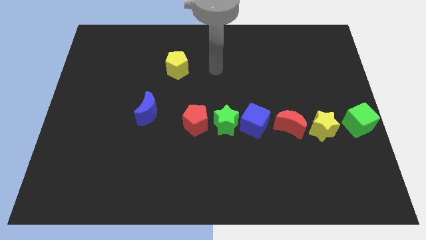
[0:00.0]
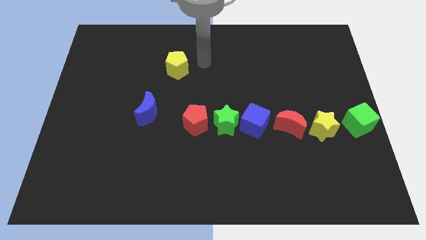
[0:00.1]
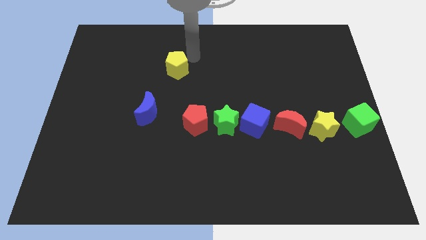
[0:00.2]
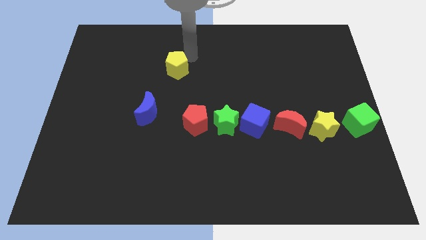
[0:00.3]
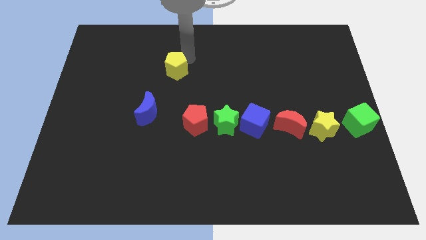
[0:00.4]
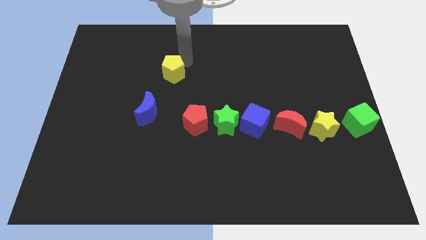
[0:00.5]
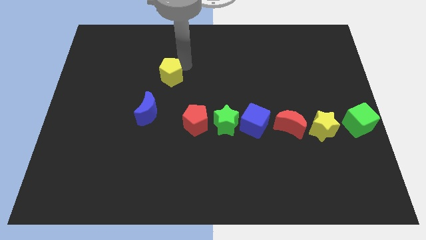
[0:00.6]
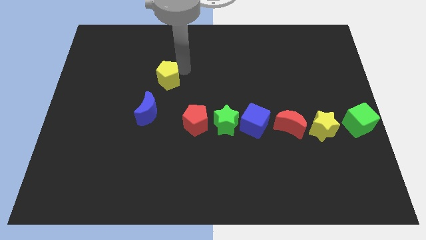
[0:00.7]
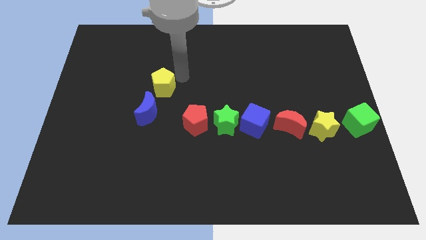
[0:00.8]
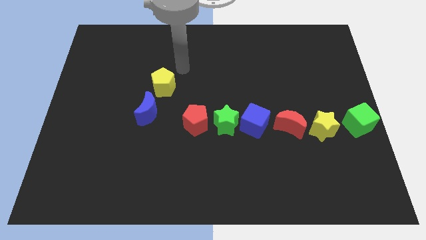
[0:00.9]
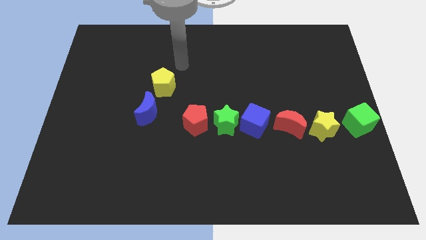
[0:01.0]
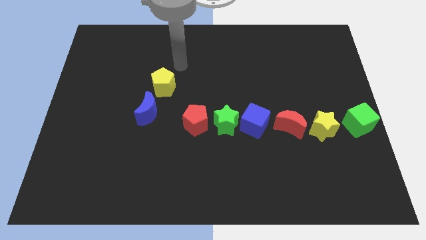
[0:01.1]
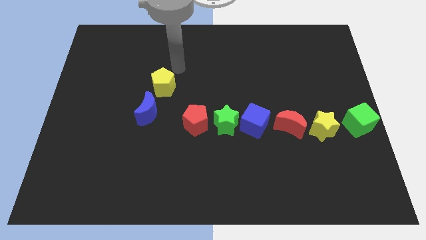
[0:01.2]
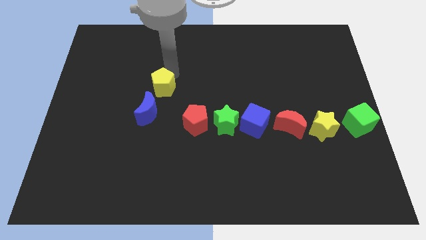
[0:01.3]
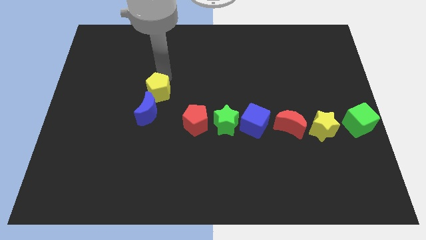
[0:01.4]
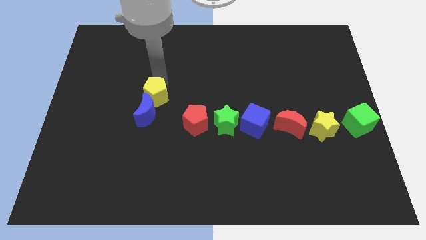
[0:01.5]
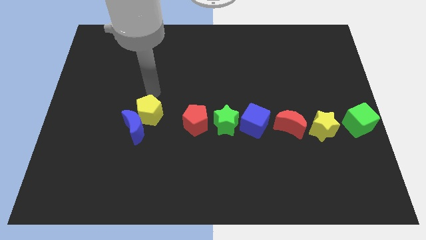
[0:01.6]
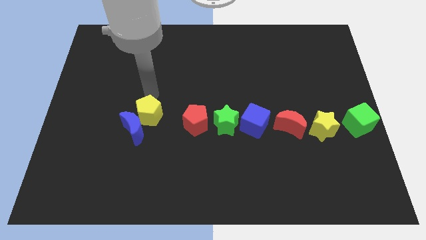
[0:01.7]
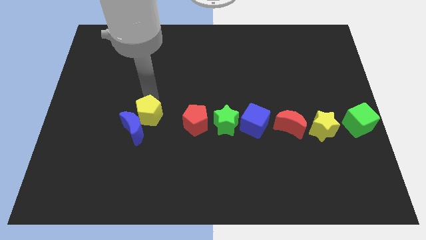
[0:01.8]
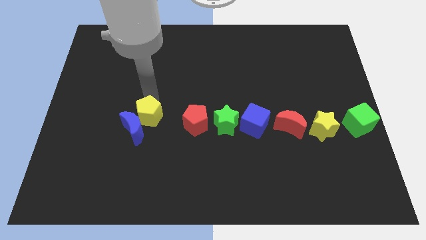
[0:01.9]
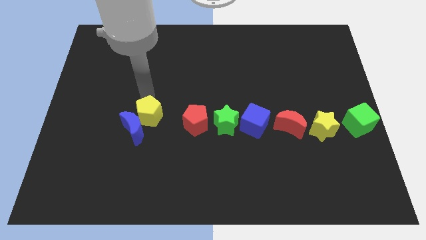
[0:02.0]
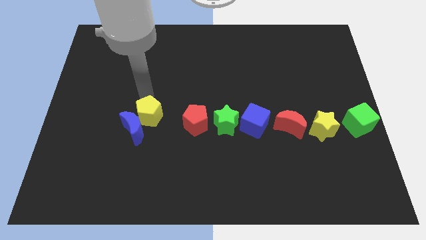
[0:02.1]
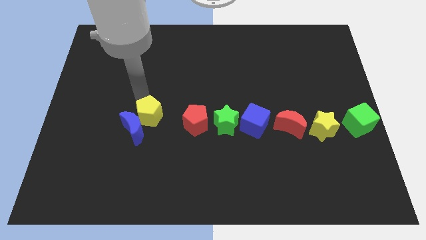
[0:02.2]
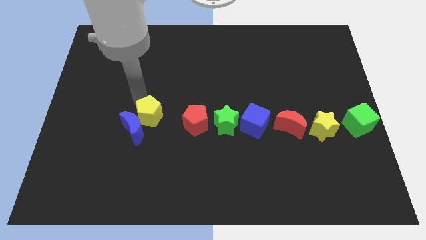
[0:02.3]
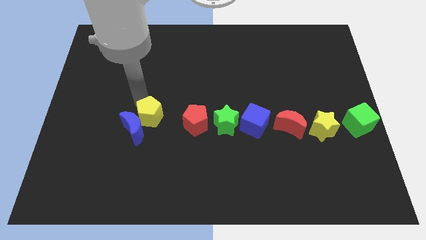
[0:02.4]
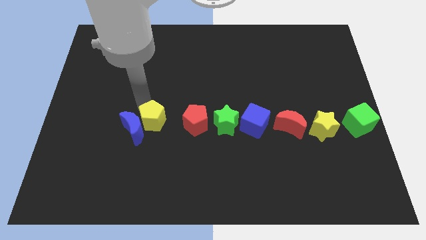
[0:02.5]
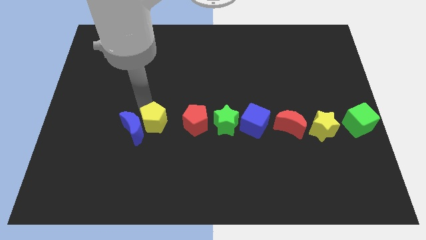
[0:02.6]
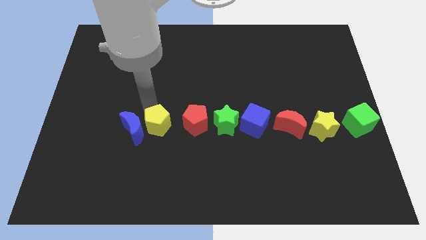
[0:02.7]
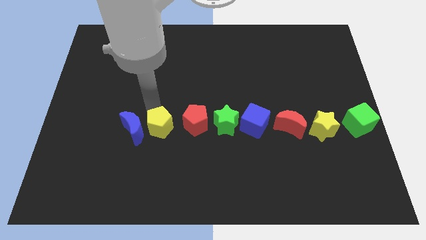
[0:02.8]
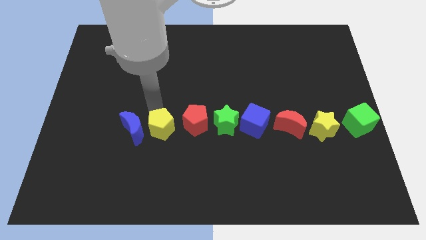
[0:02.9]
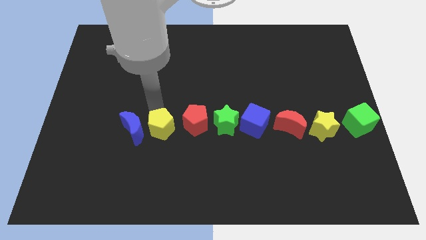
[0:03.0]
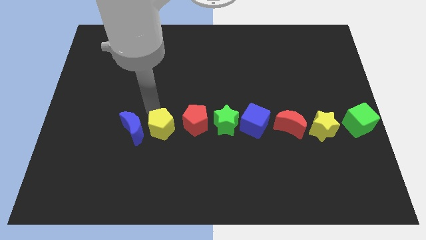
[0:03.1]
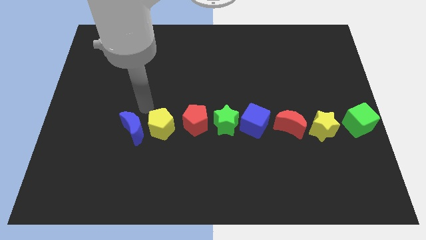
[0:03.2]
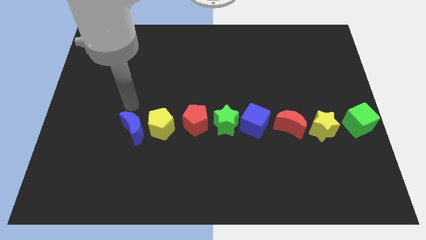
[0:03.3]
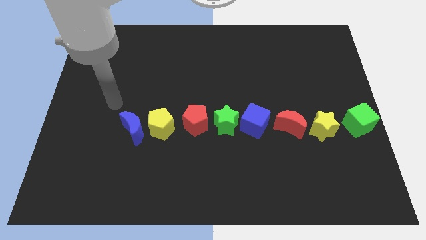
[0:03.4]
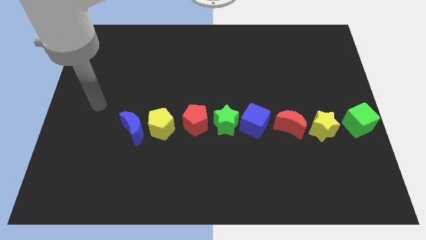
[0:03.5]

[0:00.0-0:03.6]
place the yellow pentagon in between red pentagon and blue moon

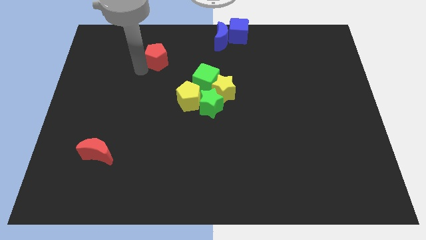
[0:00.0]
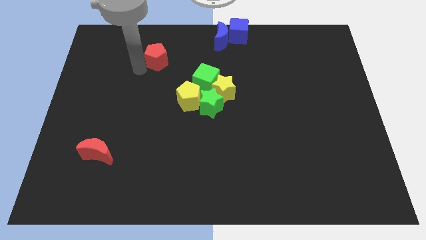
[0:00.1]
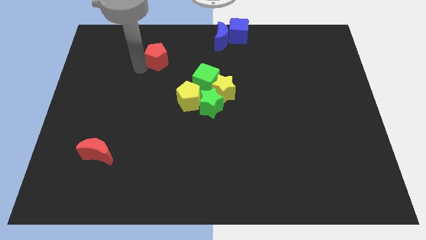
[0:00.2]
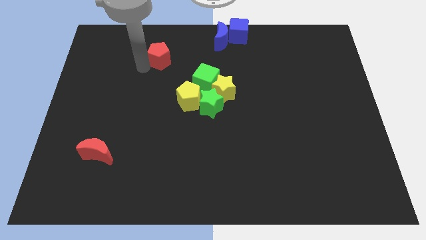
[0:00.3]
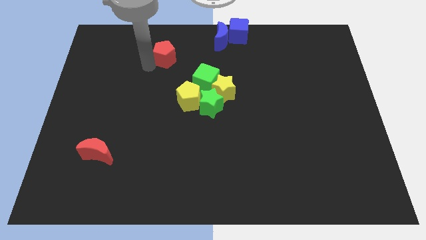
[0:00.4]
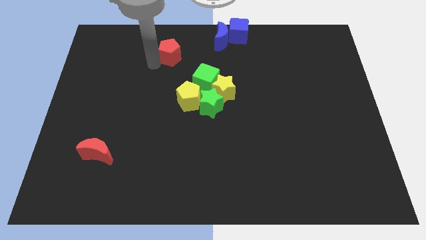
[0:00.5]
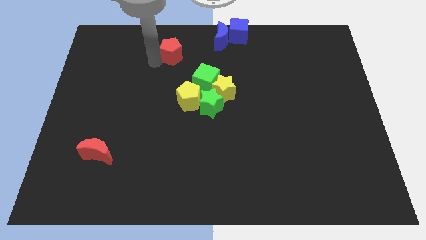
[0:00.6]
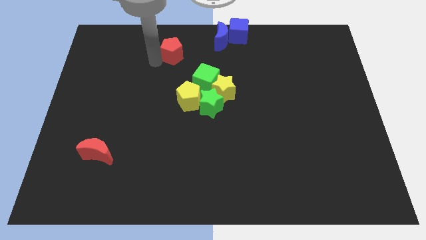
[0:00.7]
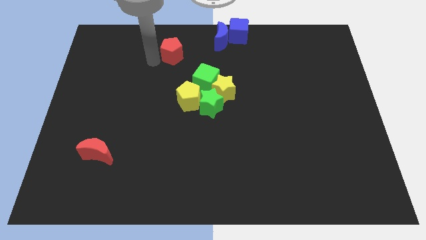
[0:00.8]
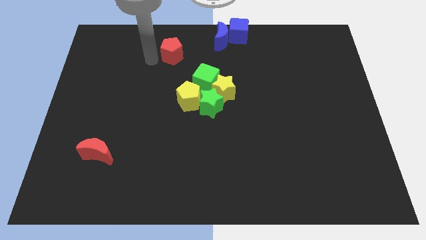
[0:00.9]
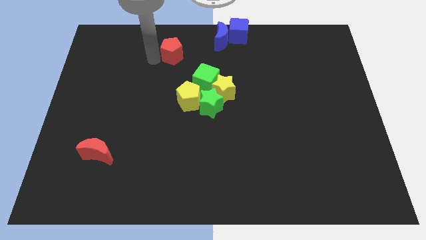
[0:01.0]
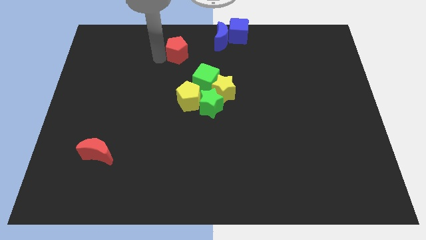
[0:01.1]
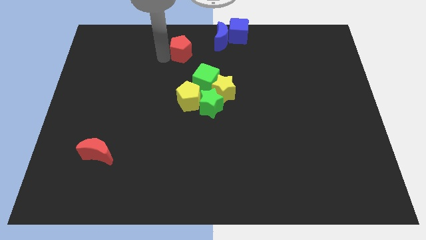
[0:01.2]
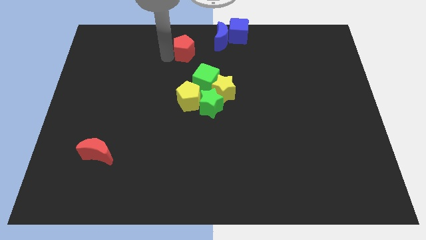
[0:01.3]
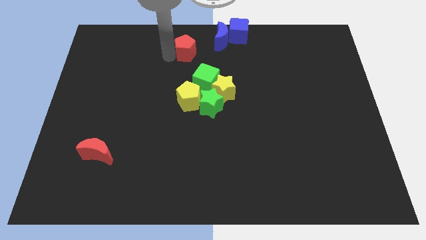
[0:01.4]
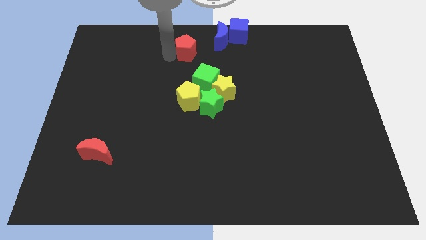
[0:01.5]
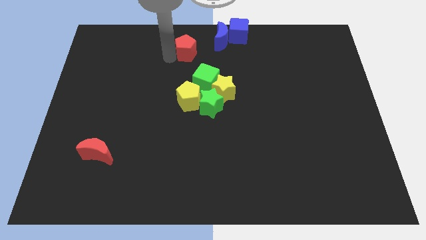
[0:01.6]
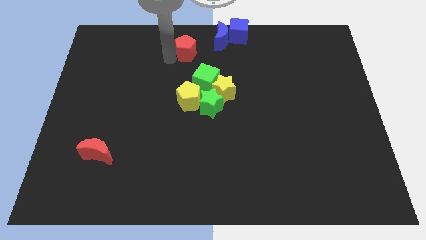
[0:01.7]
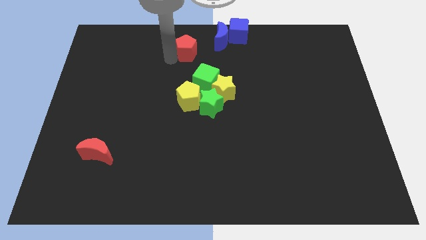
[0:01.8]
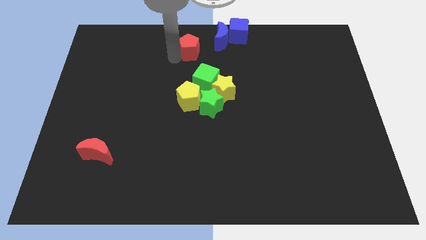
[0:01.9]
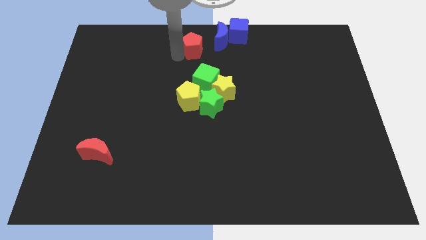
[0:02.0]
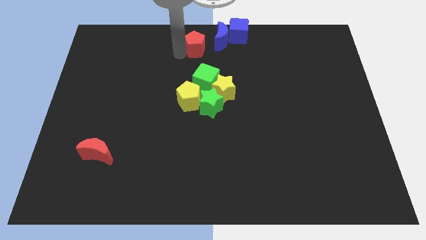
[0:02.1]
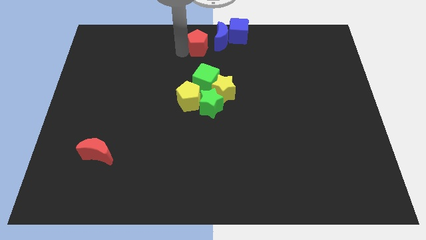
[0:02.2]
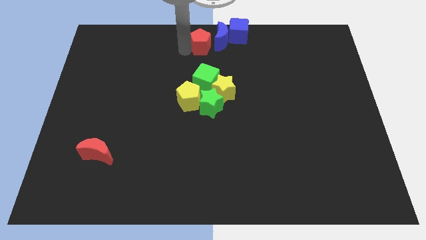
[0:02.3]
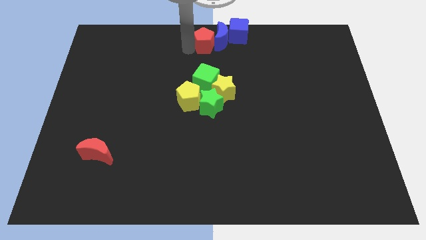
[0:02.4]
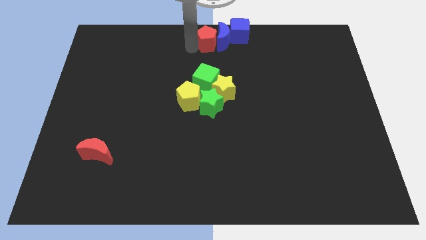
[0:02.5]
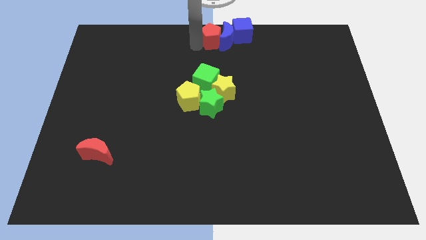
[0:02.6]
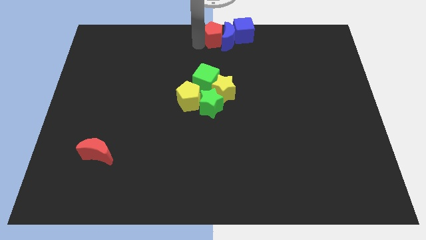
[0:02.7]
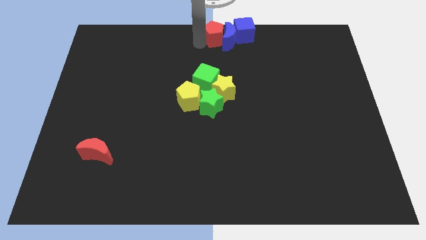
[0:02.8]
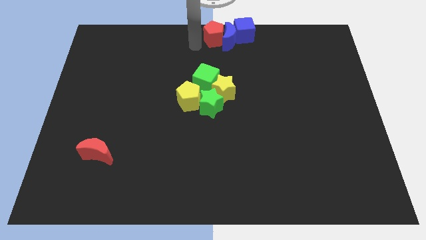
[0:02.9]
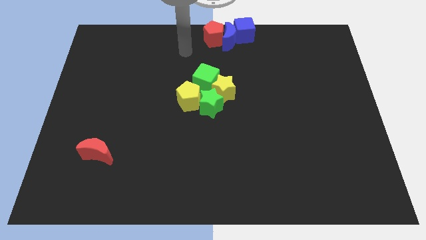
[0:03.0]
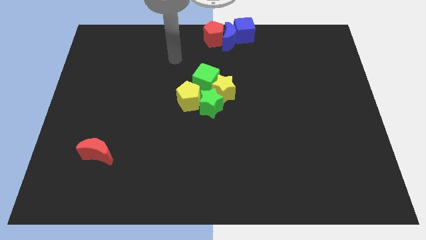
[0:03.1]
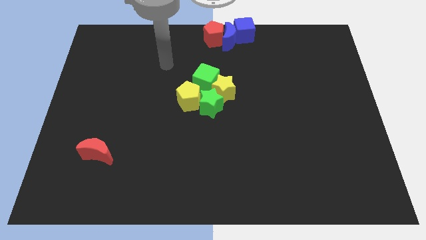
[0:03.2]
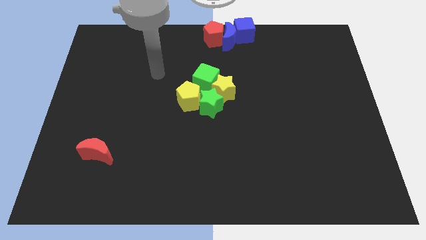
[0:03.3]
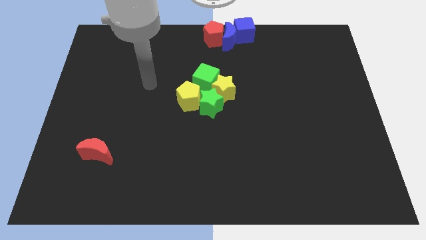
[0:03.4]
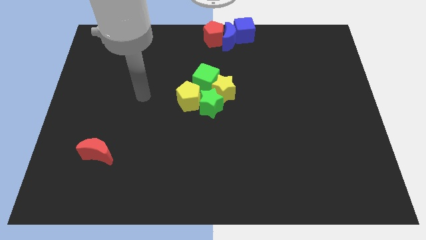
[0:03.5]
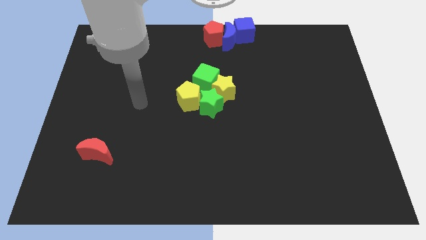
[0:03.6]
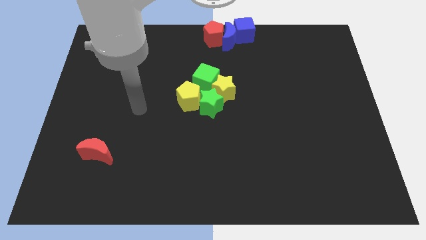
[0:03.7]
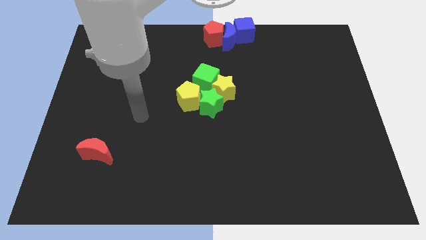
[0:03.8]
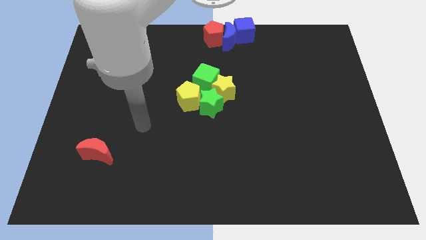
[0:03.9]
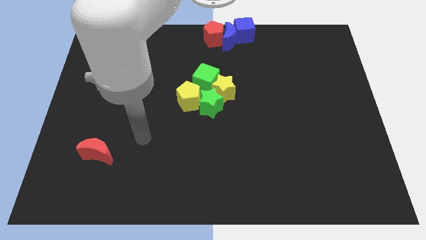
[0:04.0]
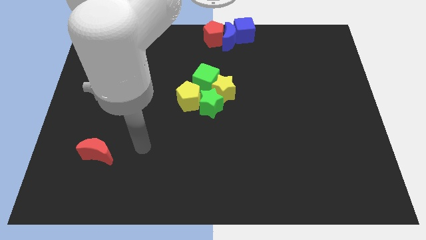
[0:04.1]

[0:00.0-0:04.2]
push red pentagon into blue moon

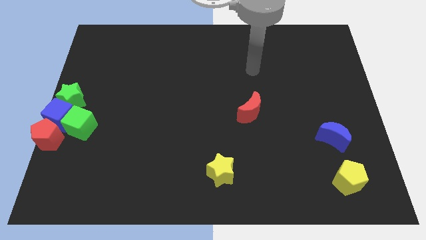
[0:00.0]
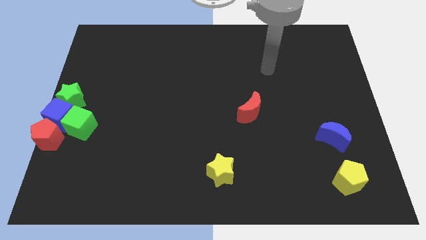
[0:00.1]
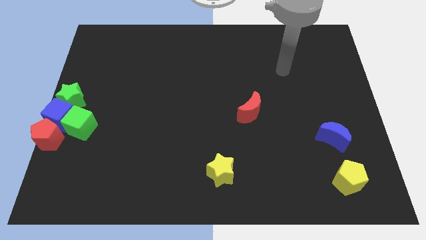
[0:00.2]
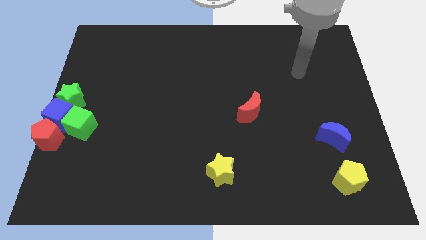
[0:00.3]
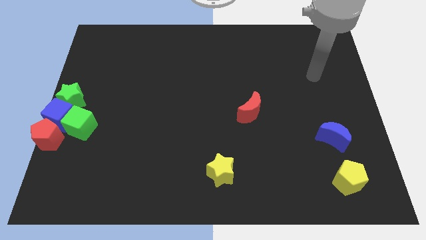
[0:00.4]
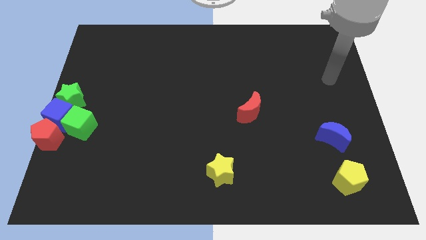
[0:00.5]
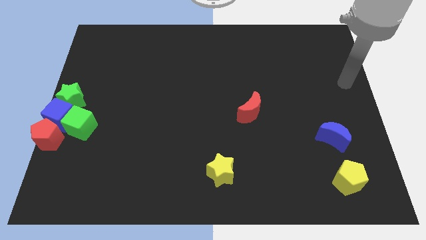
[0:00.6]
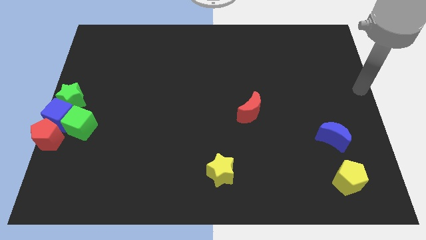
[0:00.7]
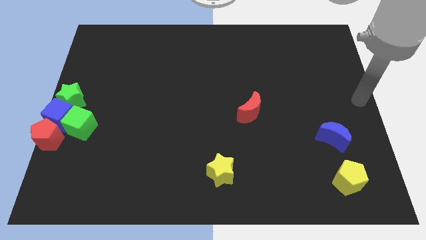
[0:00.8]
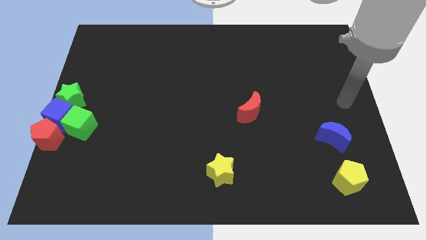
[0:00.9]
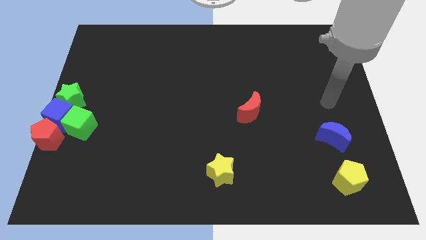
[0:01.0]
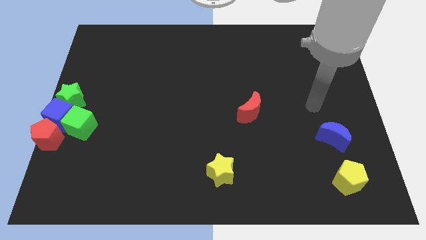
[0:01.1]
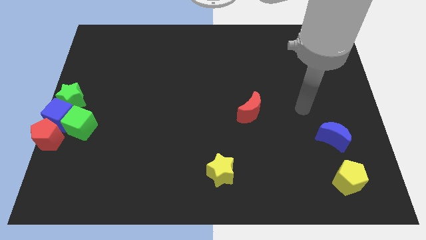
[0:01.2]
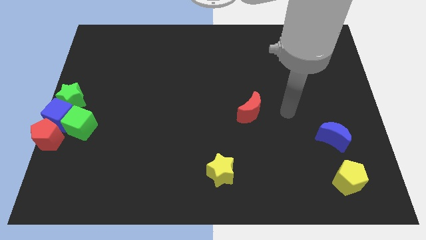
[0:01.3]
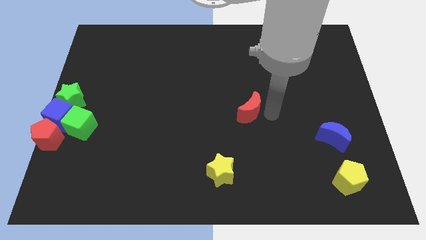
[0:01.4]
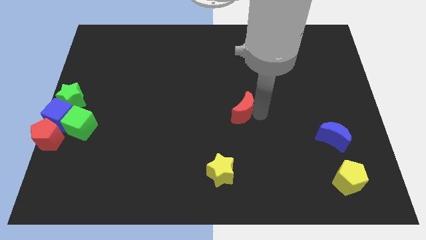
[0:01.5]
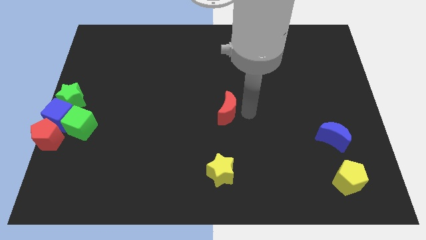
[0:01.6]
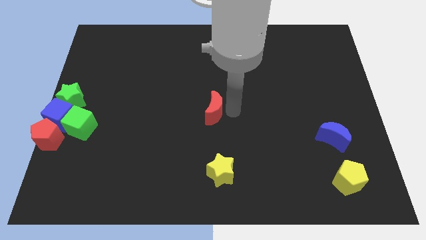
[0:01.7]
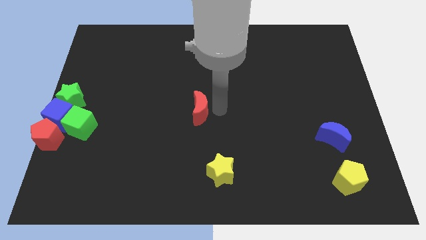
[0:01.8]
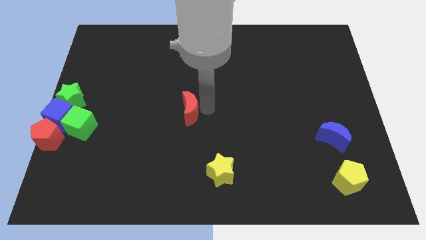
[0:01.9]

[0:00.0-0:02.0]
push the red crescent towards the center of the board
